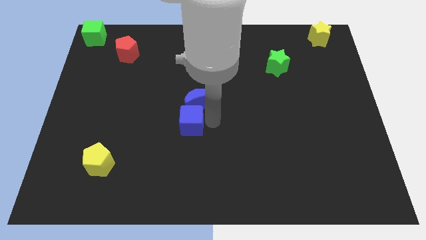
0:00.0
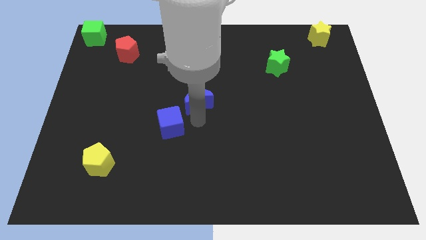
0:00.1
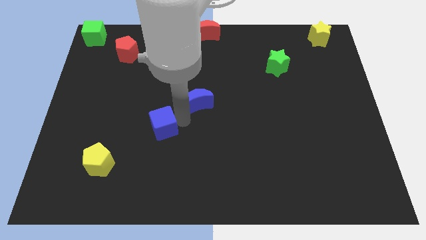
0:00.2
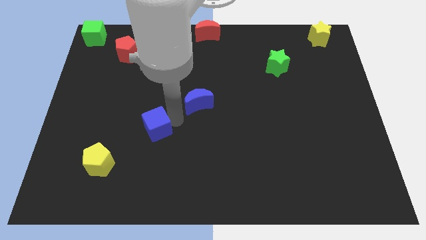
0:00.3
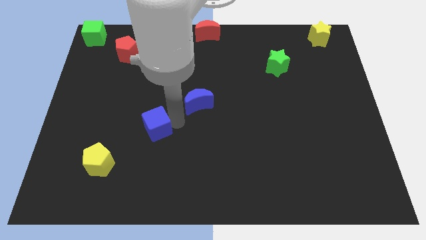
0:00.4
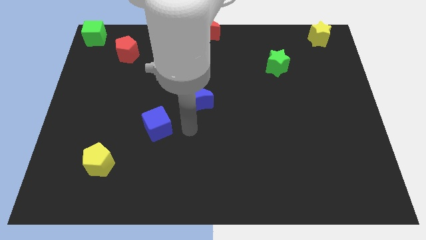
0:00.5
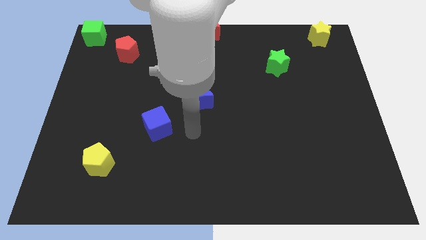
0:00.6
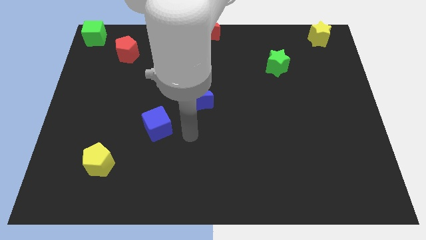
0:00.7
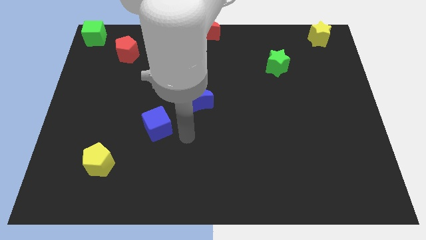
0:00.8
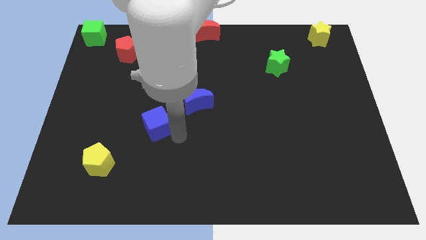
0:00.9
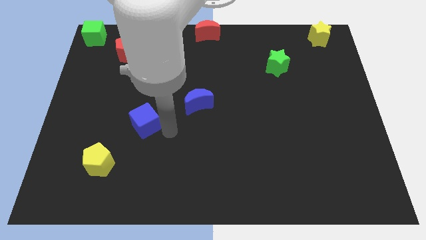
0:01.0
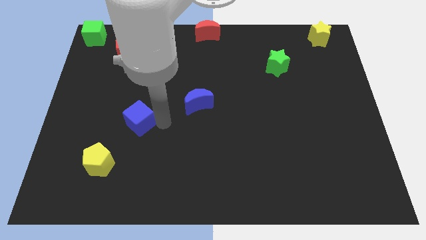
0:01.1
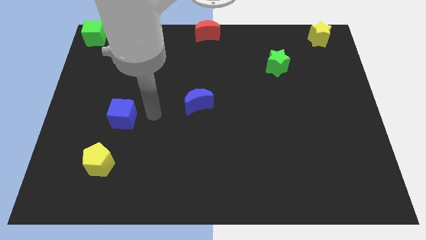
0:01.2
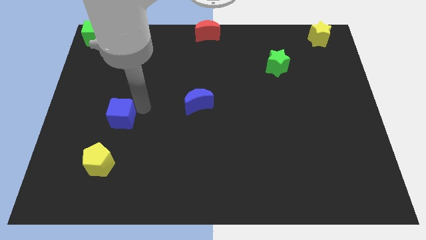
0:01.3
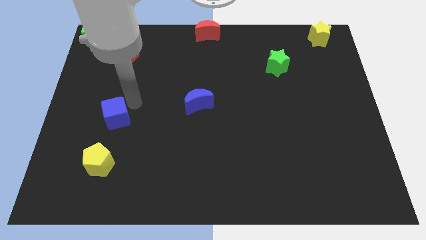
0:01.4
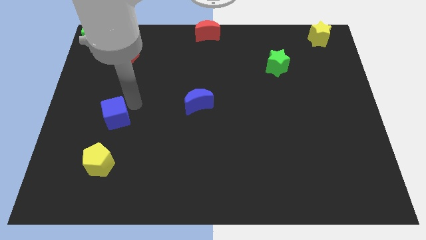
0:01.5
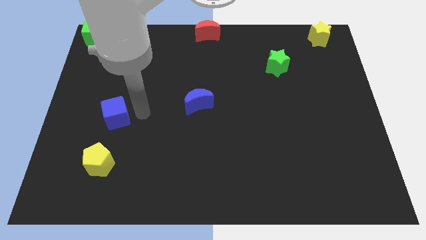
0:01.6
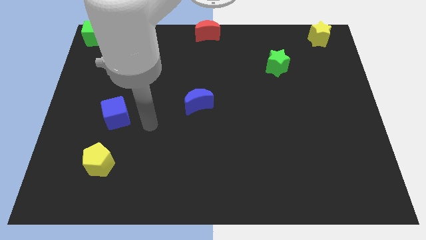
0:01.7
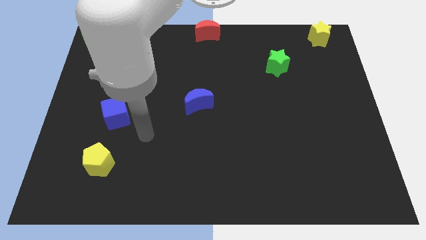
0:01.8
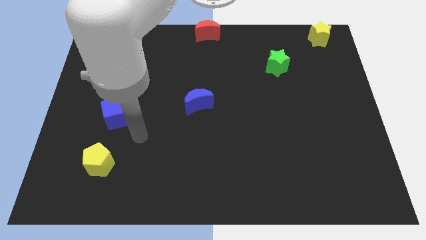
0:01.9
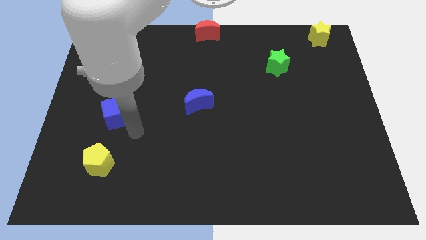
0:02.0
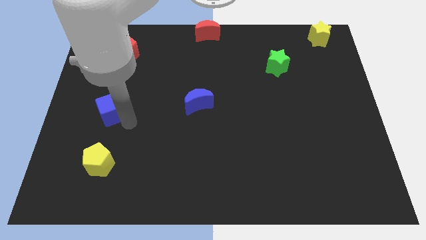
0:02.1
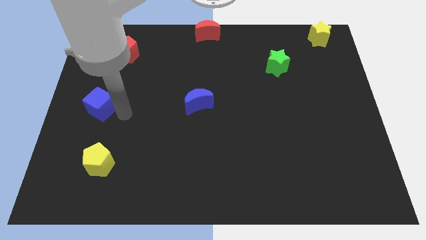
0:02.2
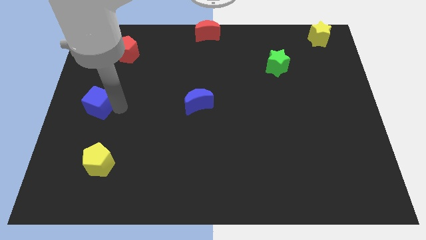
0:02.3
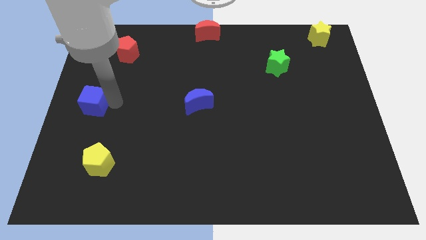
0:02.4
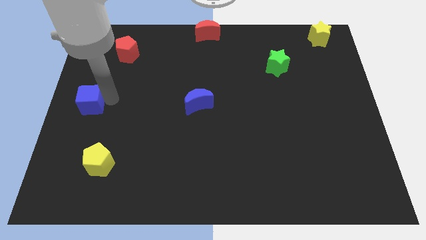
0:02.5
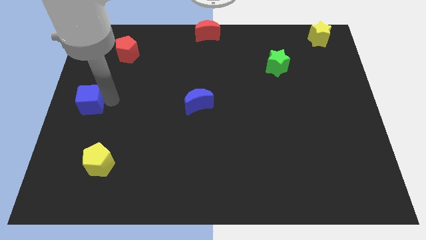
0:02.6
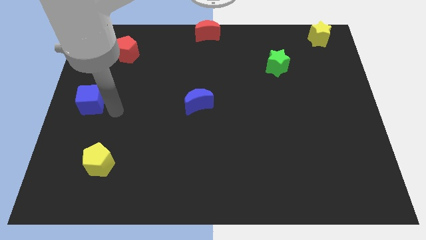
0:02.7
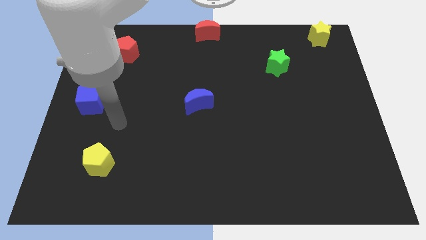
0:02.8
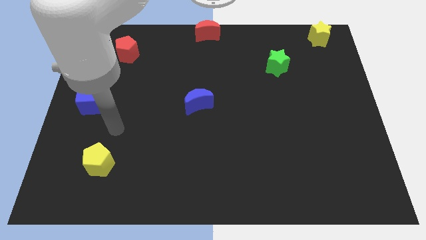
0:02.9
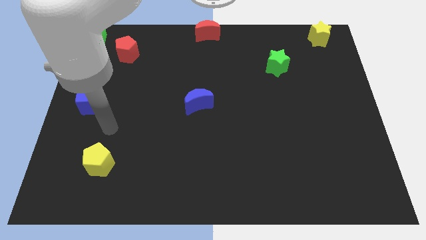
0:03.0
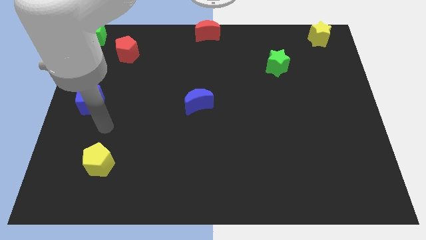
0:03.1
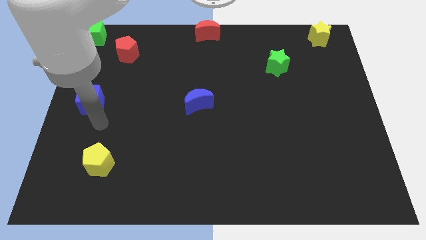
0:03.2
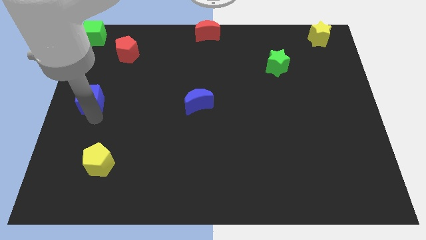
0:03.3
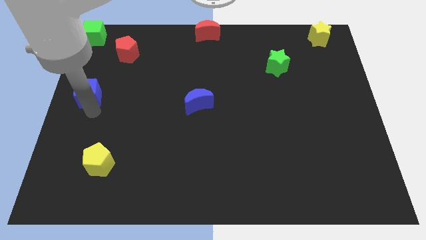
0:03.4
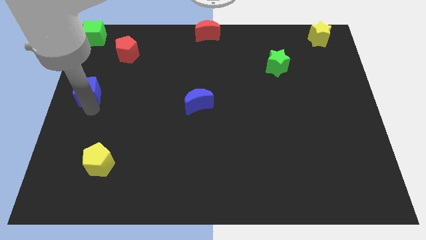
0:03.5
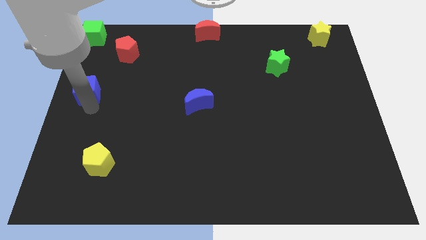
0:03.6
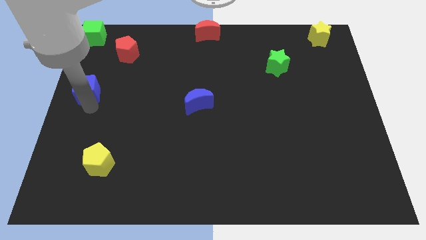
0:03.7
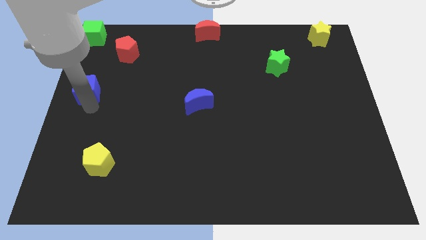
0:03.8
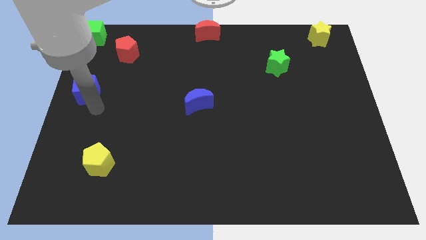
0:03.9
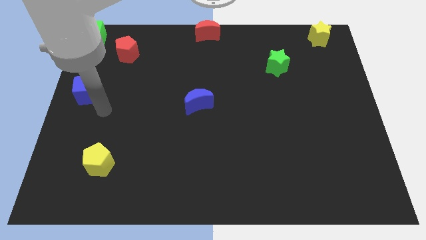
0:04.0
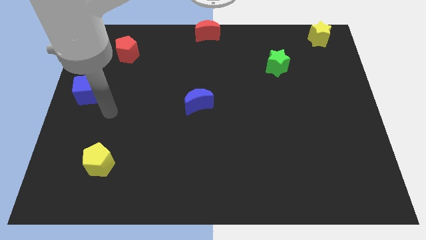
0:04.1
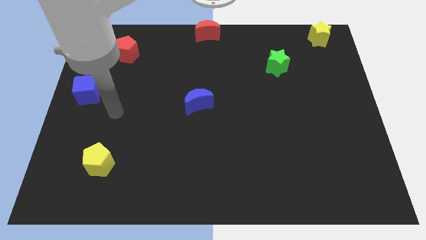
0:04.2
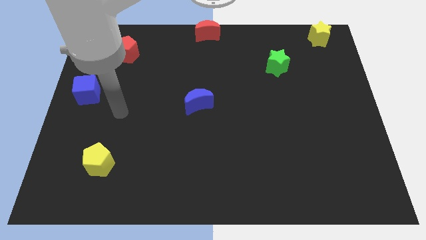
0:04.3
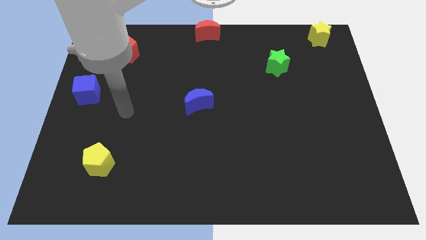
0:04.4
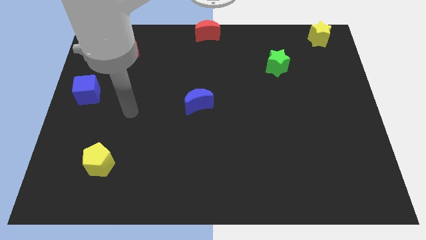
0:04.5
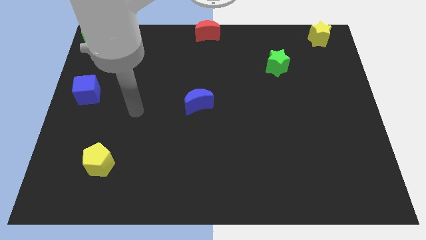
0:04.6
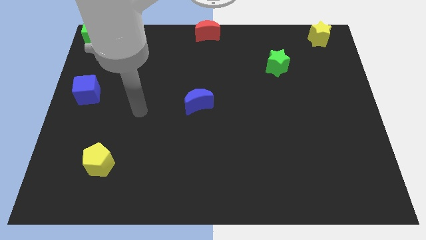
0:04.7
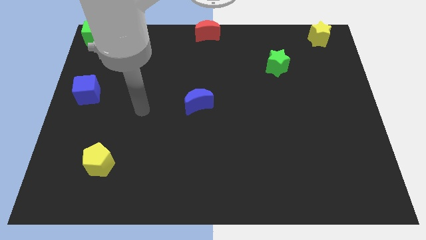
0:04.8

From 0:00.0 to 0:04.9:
place the blue cube in between the green cube and yellow pentagon

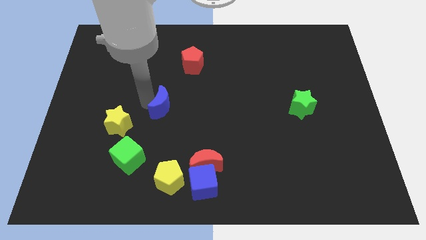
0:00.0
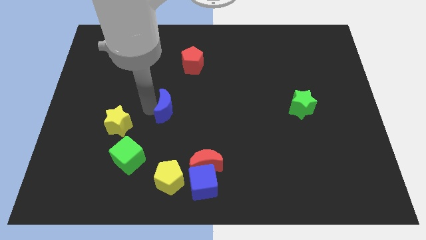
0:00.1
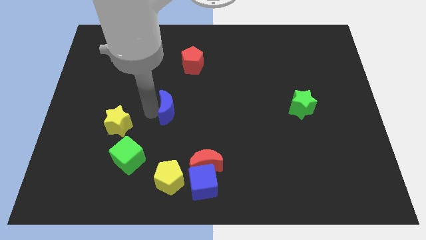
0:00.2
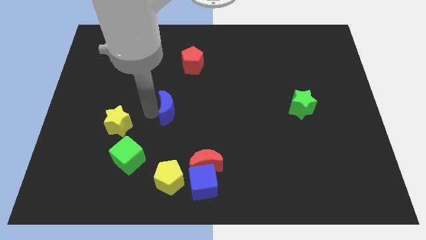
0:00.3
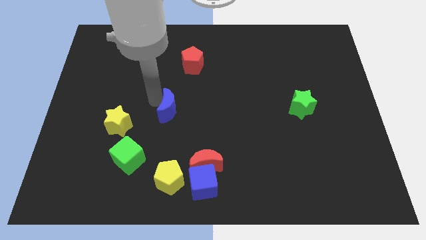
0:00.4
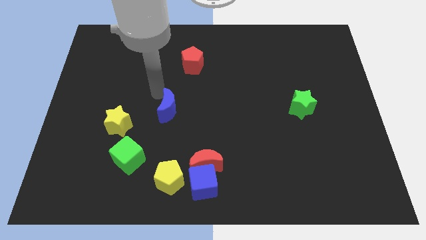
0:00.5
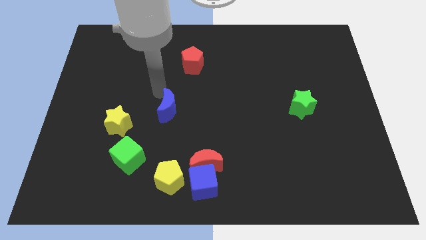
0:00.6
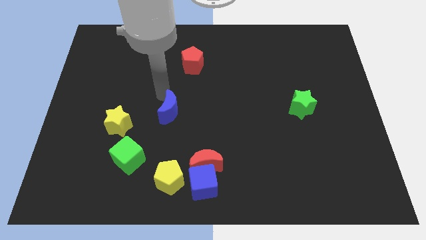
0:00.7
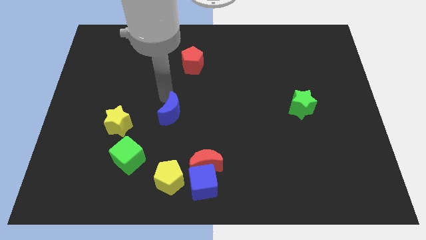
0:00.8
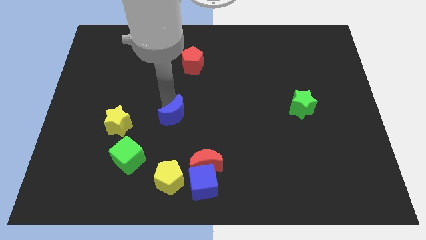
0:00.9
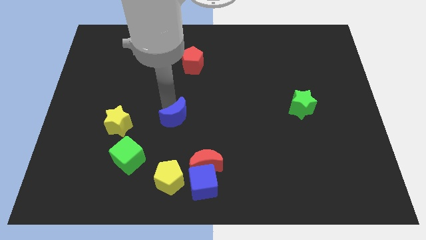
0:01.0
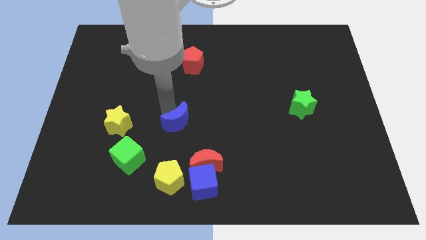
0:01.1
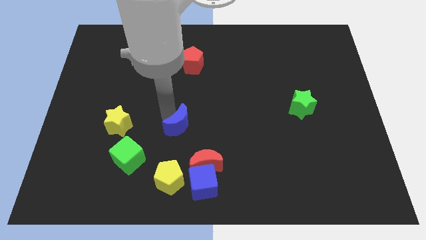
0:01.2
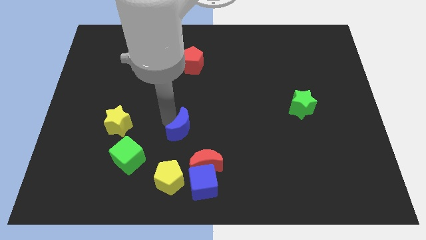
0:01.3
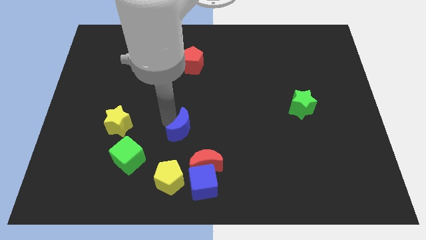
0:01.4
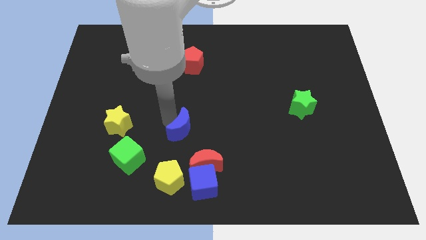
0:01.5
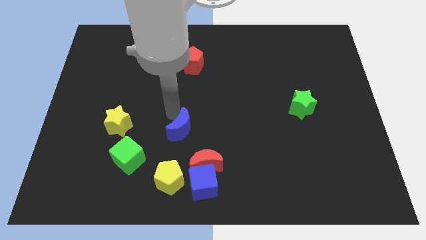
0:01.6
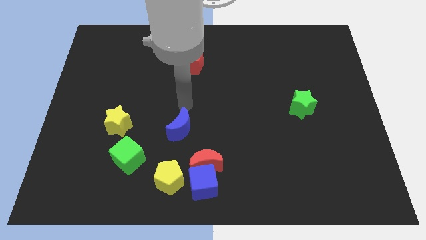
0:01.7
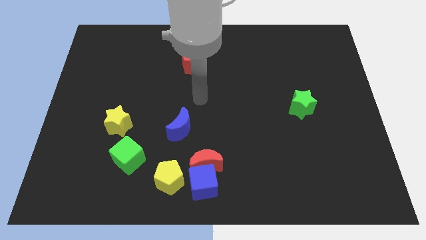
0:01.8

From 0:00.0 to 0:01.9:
move the blue moon above the yellow pentagon

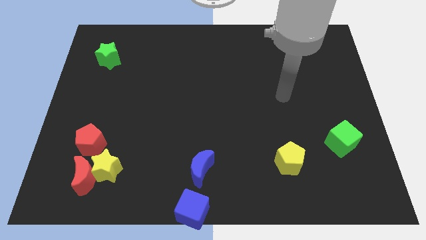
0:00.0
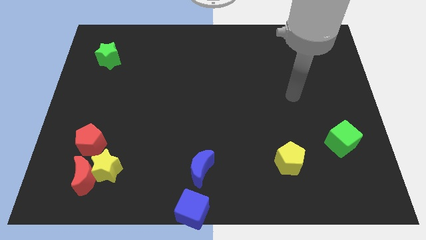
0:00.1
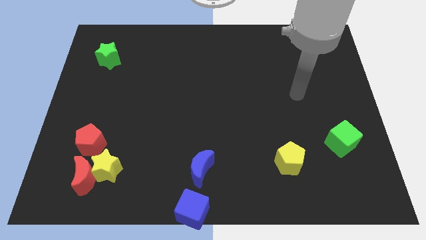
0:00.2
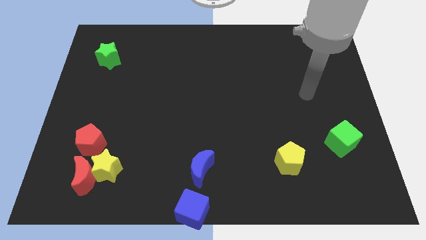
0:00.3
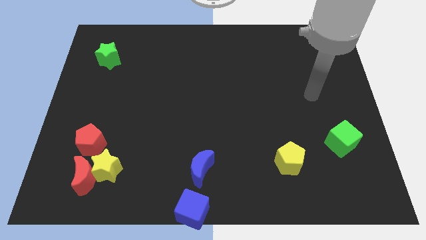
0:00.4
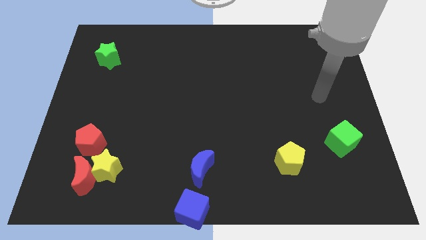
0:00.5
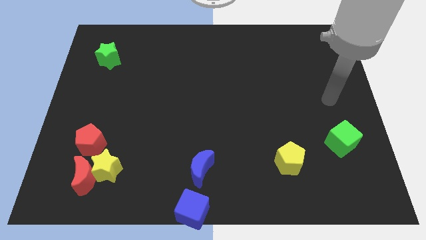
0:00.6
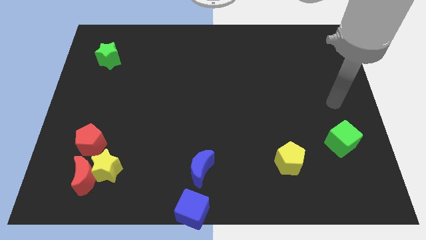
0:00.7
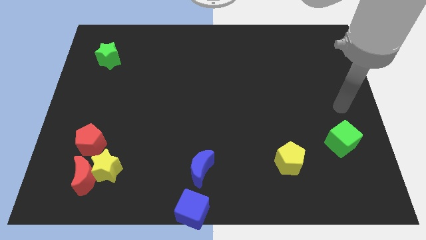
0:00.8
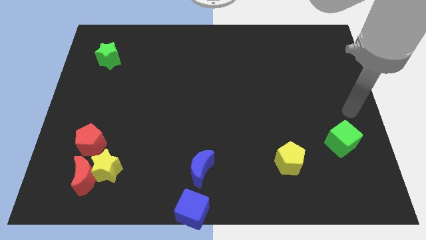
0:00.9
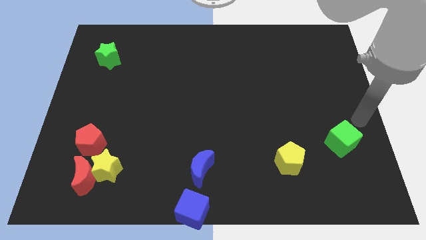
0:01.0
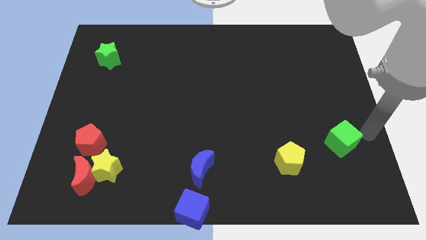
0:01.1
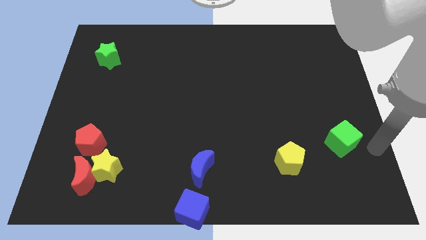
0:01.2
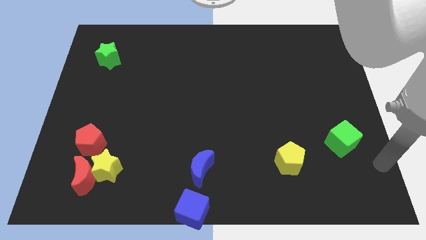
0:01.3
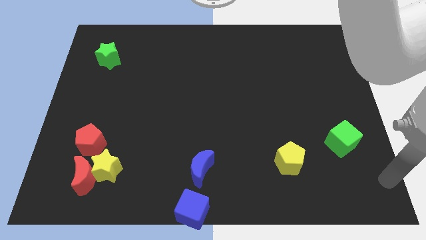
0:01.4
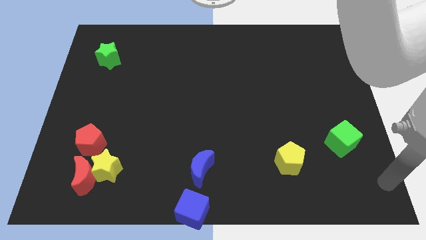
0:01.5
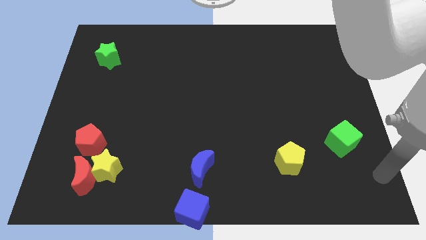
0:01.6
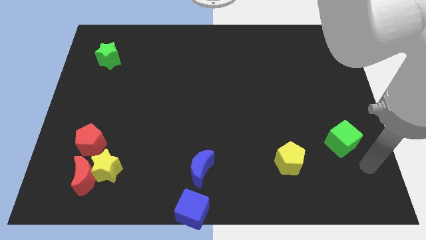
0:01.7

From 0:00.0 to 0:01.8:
move your arm towards the green cube

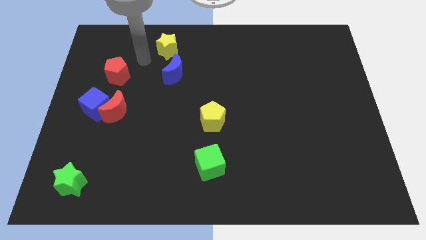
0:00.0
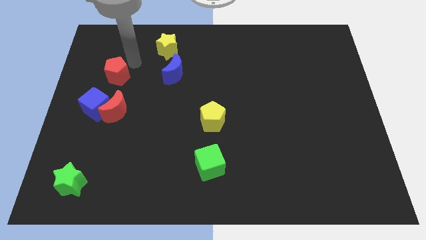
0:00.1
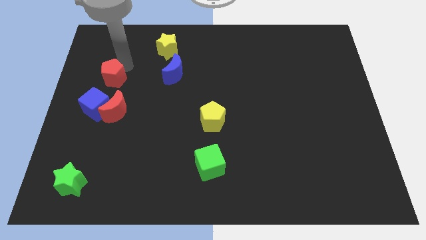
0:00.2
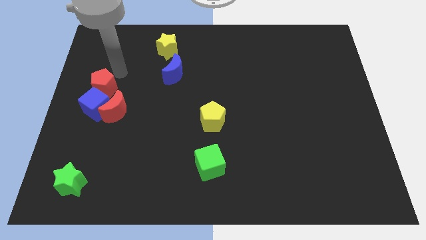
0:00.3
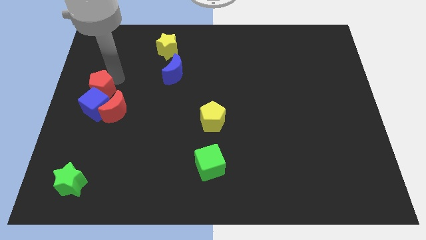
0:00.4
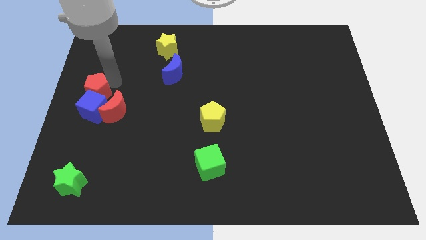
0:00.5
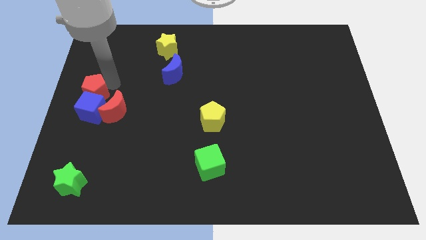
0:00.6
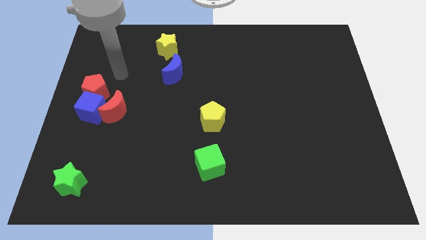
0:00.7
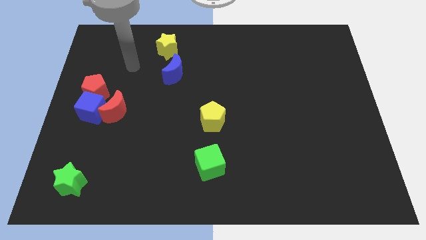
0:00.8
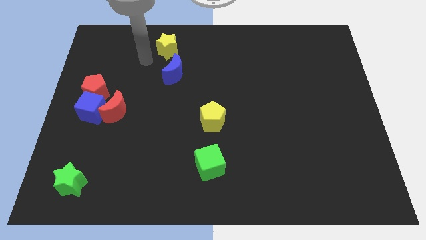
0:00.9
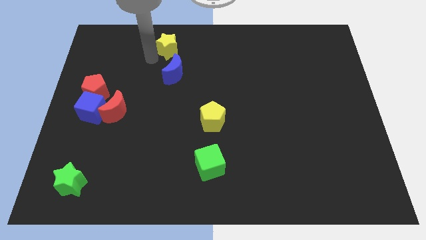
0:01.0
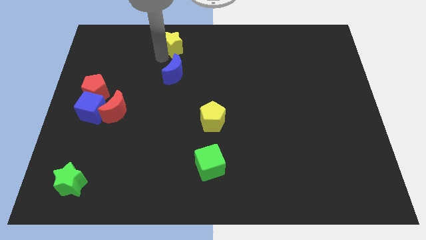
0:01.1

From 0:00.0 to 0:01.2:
push the red pentagon into the blue cube
